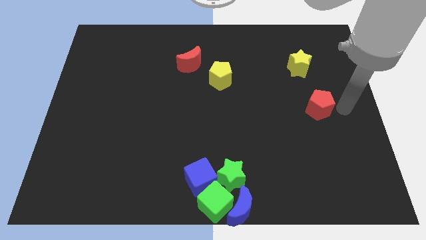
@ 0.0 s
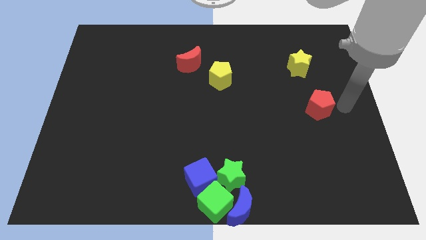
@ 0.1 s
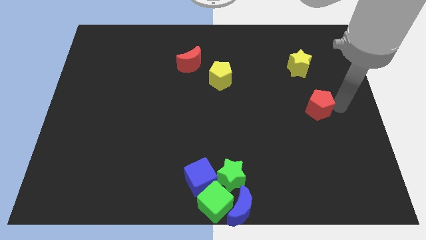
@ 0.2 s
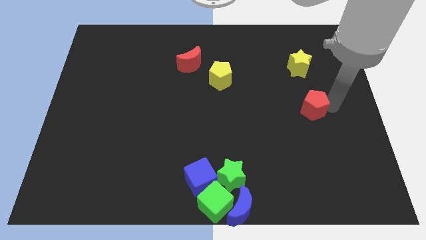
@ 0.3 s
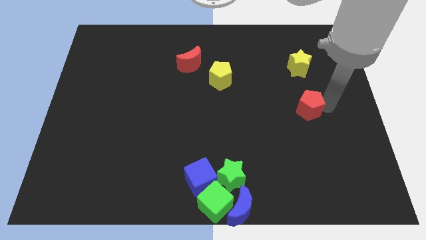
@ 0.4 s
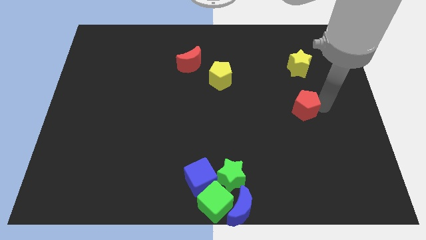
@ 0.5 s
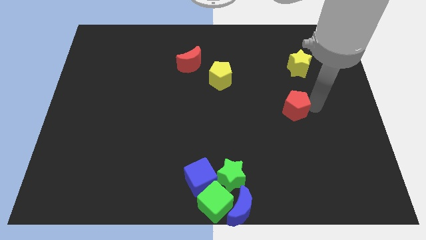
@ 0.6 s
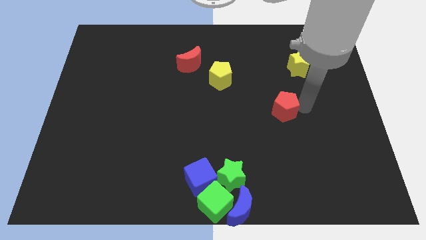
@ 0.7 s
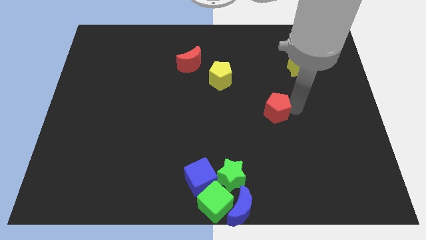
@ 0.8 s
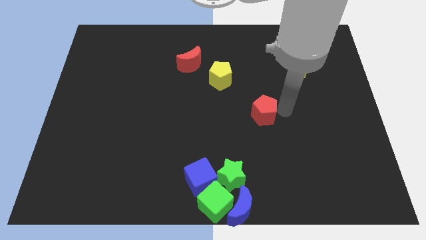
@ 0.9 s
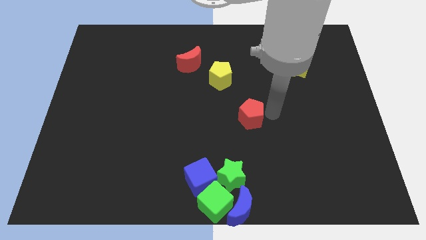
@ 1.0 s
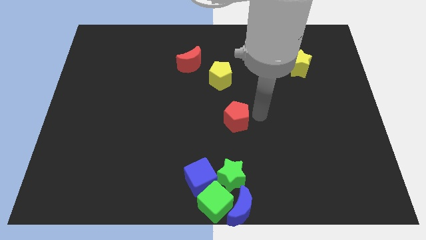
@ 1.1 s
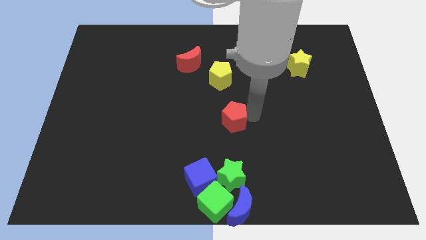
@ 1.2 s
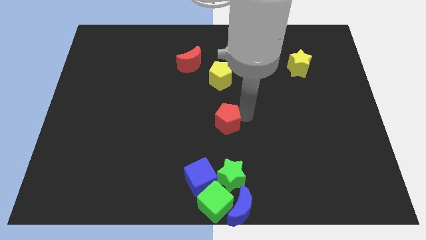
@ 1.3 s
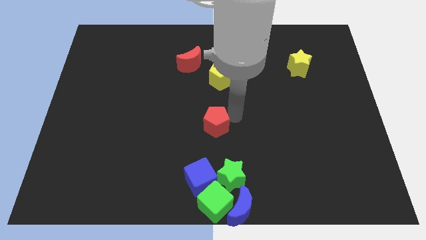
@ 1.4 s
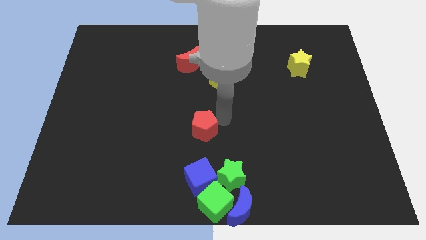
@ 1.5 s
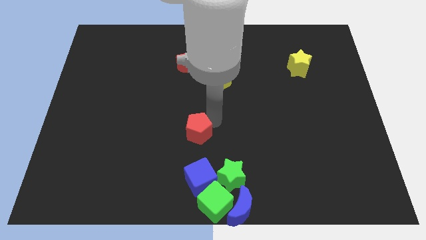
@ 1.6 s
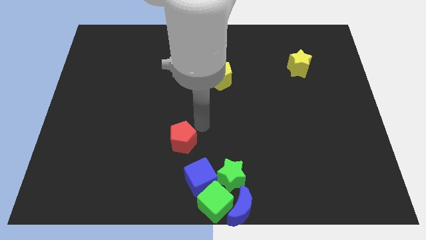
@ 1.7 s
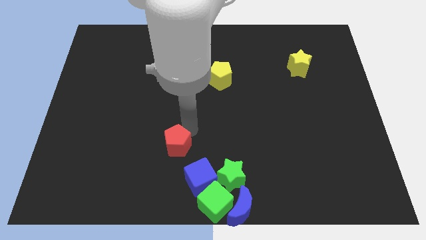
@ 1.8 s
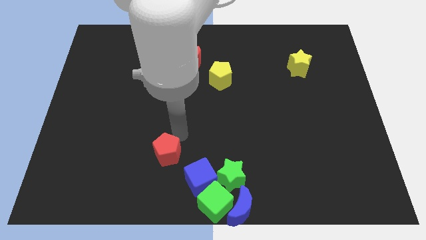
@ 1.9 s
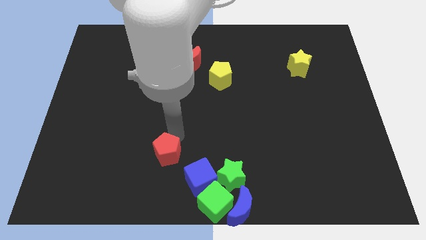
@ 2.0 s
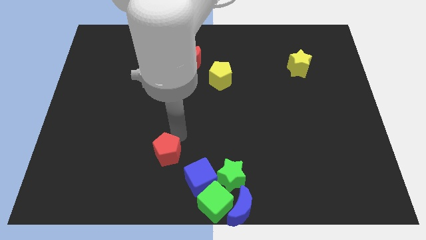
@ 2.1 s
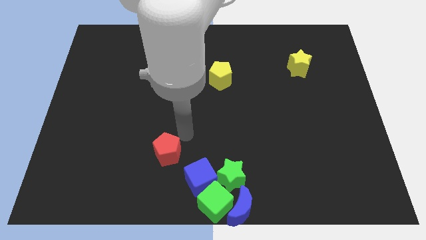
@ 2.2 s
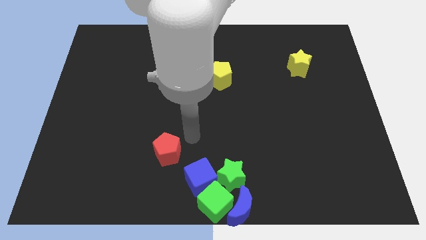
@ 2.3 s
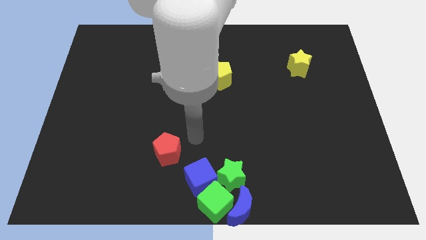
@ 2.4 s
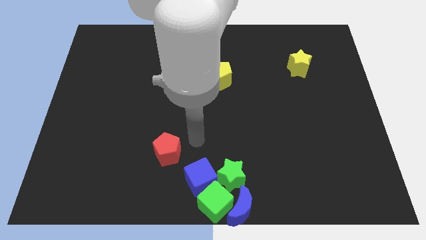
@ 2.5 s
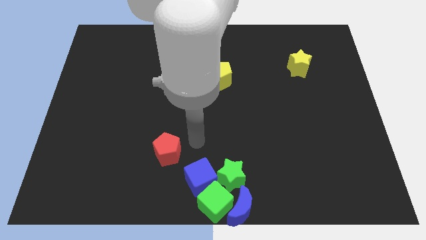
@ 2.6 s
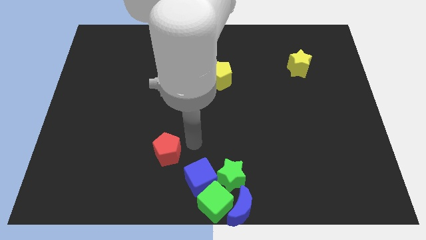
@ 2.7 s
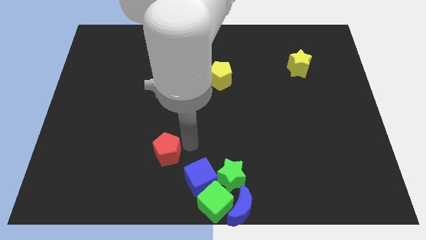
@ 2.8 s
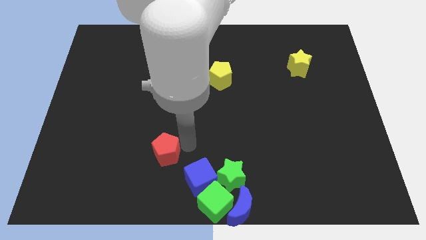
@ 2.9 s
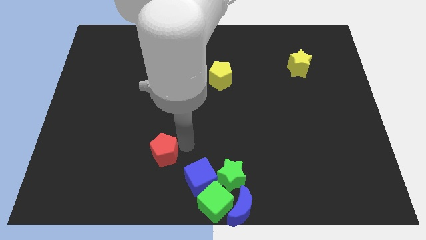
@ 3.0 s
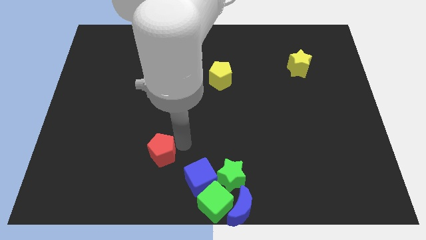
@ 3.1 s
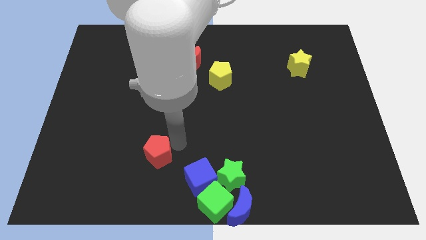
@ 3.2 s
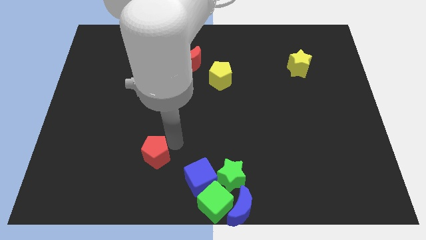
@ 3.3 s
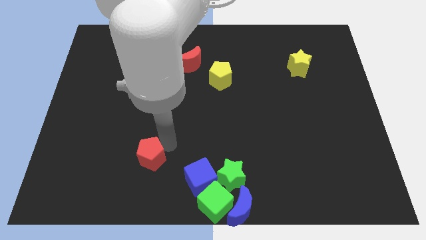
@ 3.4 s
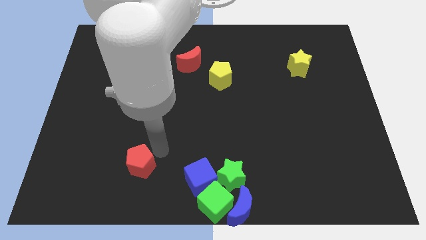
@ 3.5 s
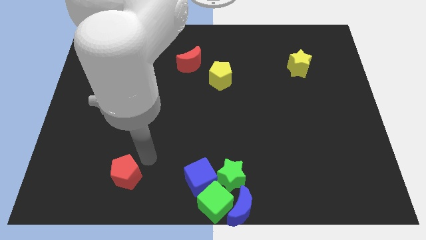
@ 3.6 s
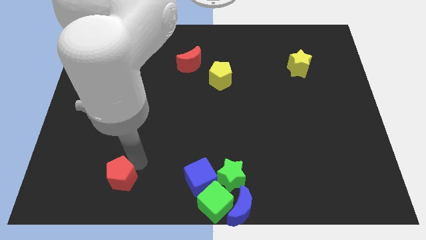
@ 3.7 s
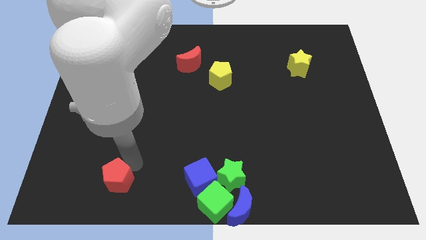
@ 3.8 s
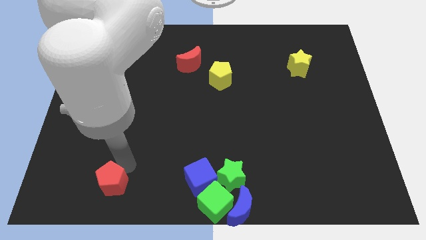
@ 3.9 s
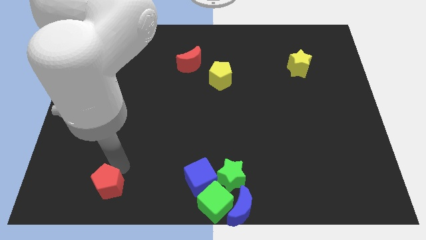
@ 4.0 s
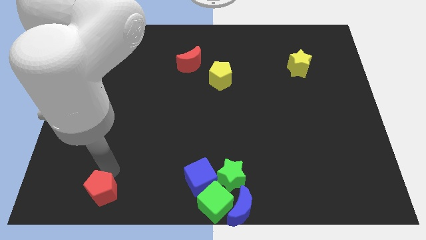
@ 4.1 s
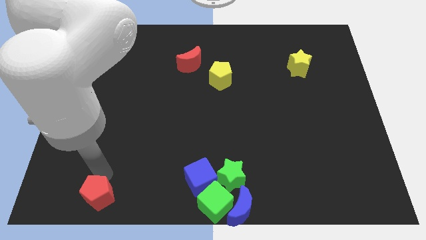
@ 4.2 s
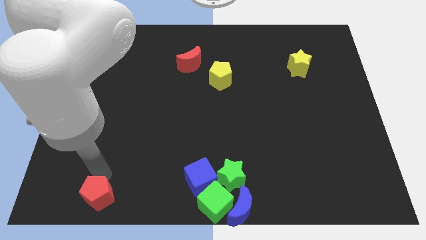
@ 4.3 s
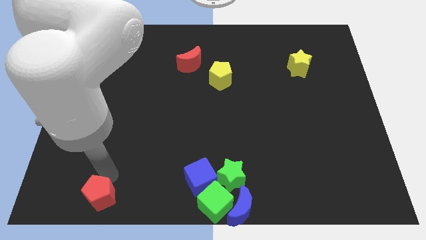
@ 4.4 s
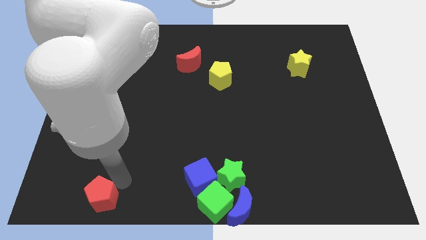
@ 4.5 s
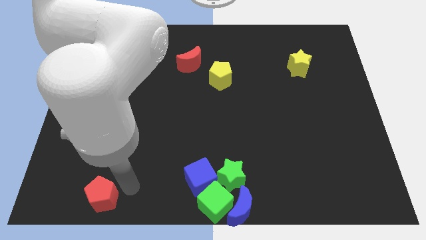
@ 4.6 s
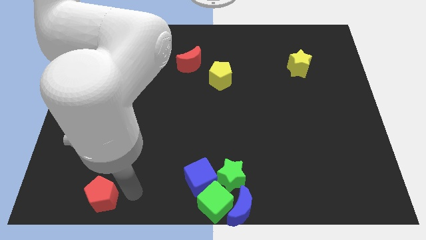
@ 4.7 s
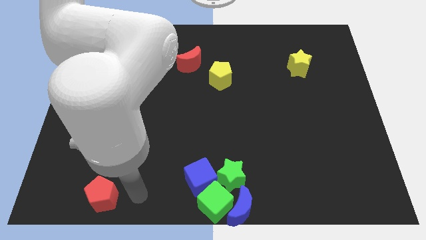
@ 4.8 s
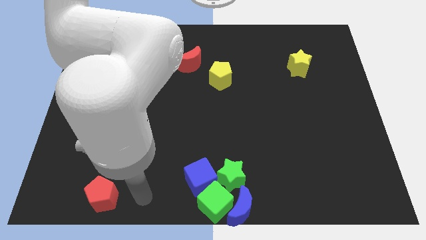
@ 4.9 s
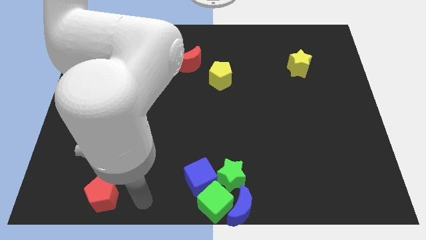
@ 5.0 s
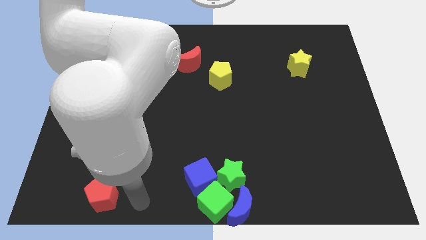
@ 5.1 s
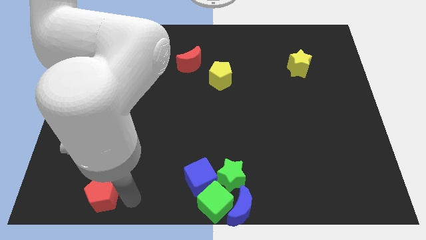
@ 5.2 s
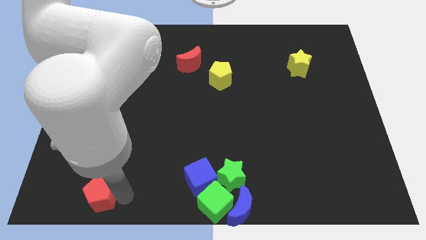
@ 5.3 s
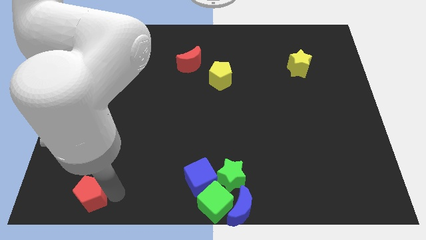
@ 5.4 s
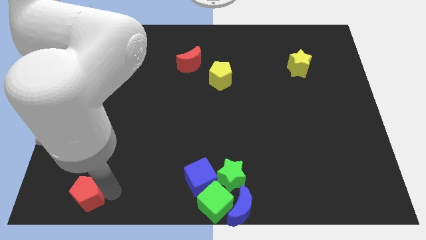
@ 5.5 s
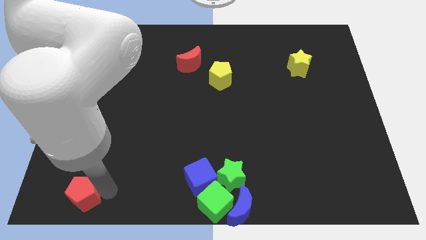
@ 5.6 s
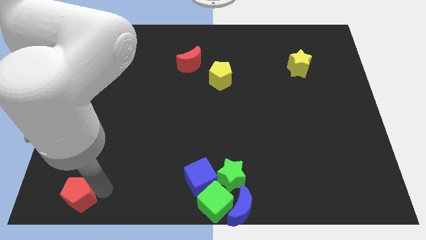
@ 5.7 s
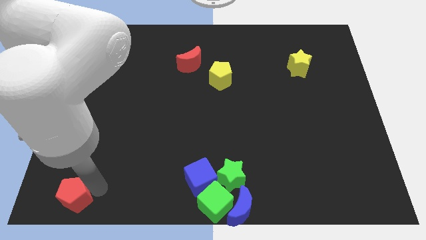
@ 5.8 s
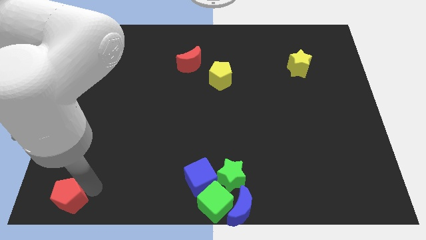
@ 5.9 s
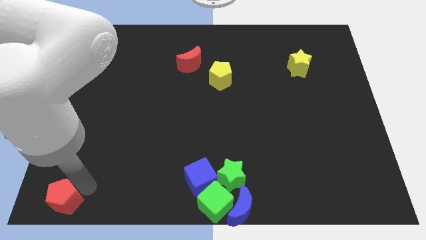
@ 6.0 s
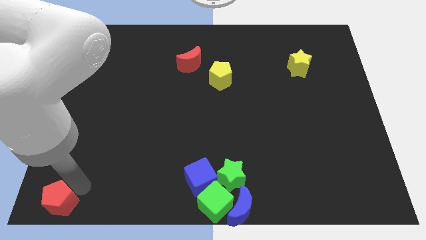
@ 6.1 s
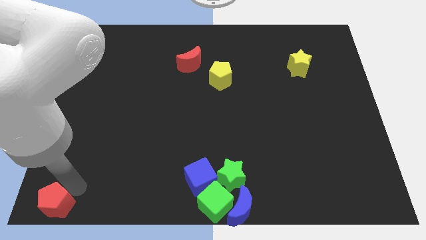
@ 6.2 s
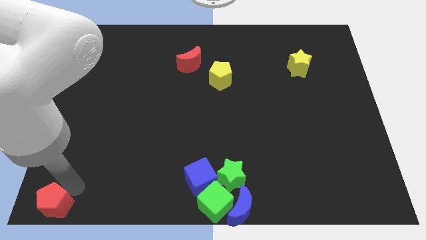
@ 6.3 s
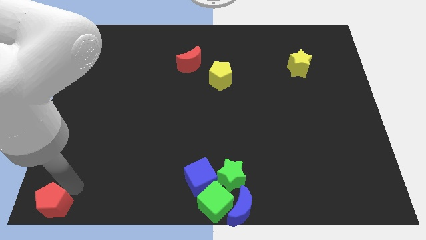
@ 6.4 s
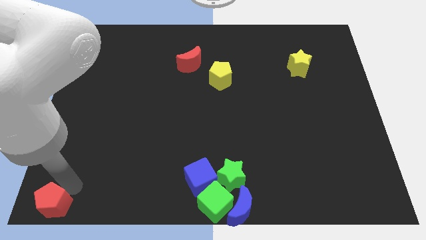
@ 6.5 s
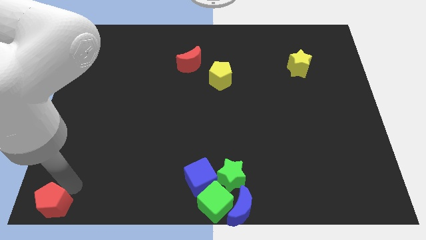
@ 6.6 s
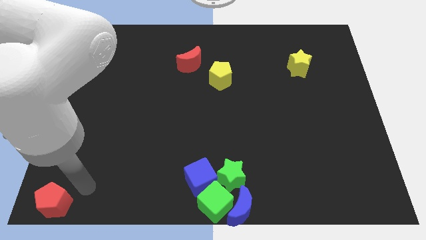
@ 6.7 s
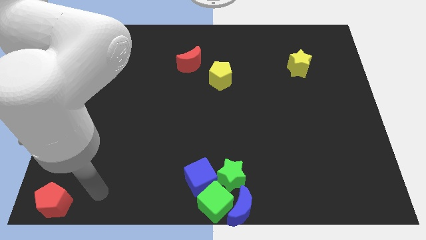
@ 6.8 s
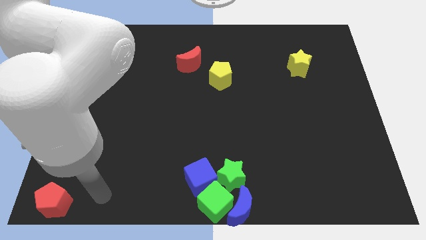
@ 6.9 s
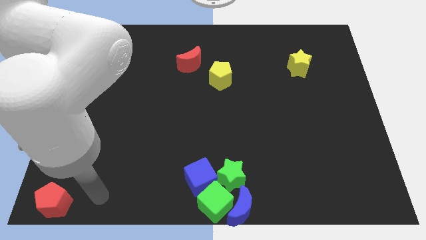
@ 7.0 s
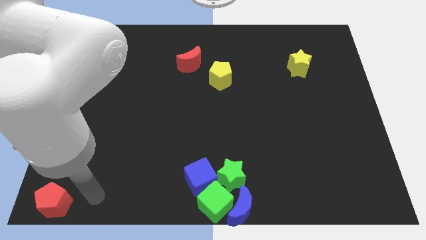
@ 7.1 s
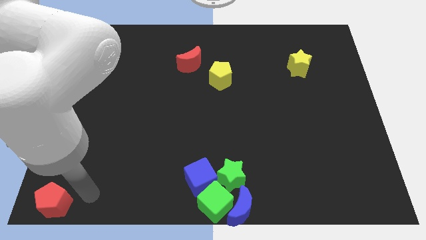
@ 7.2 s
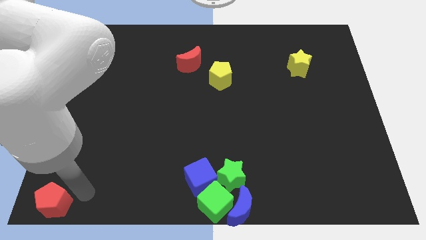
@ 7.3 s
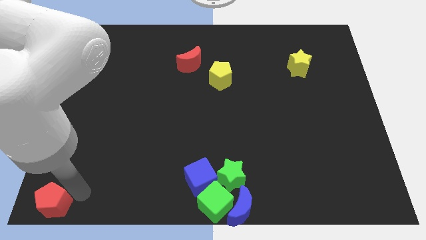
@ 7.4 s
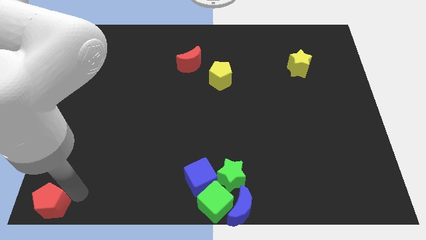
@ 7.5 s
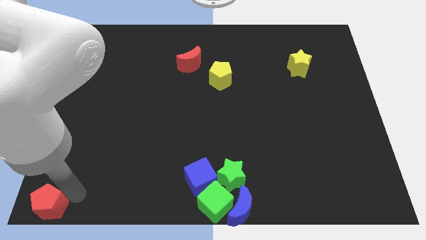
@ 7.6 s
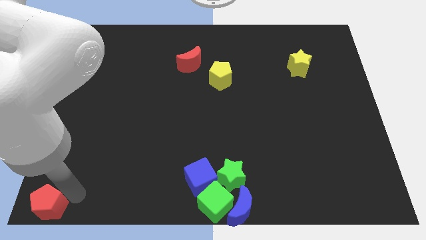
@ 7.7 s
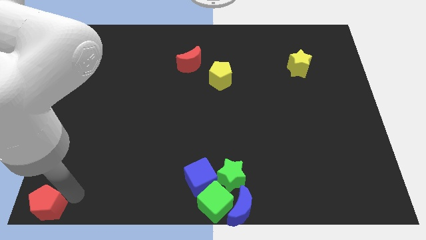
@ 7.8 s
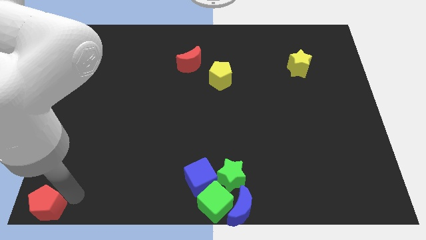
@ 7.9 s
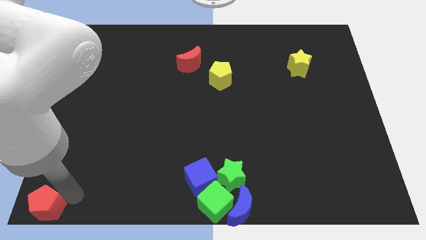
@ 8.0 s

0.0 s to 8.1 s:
move red pentagon to the bottom left

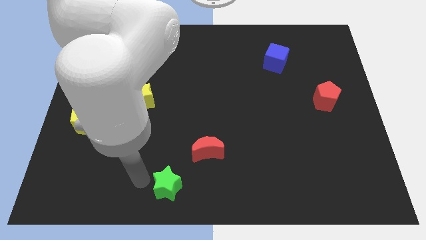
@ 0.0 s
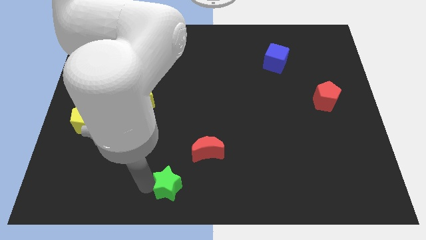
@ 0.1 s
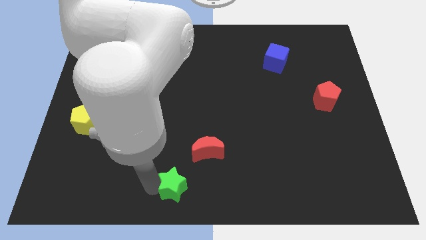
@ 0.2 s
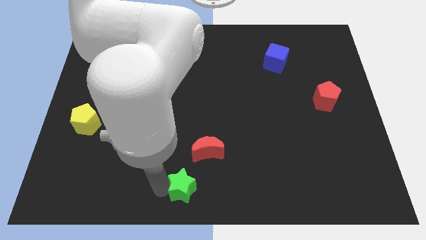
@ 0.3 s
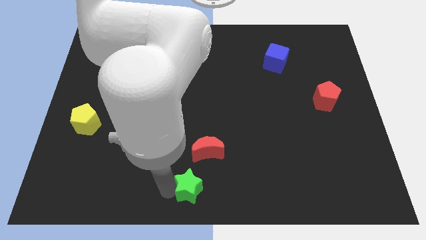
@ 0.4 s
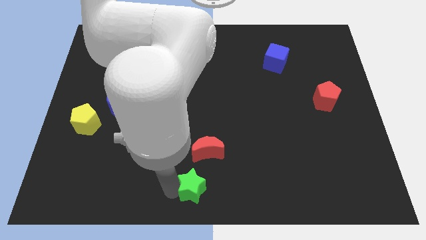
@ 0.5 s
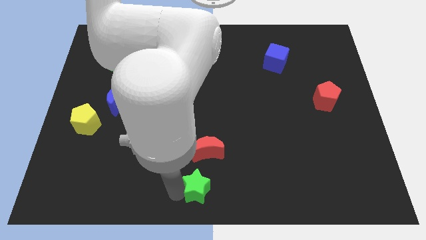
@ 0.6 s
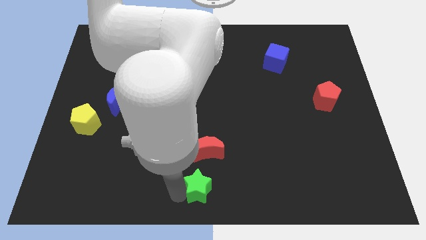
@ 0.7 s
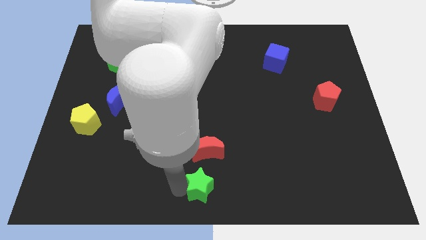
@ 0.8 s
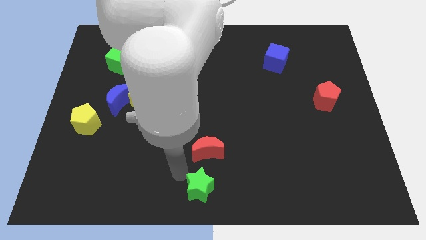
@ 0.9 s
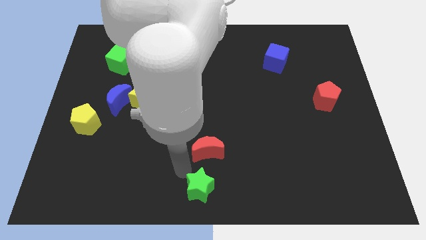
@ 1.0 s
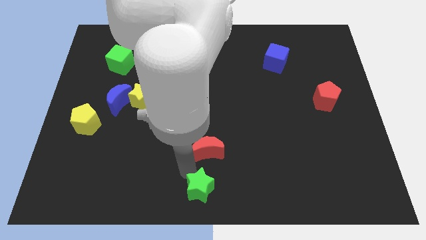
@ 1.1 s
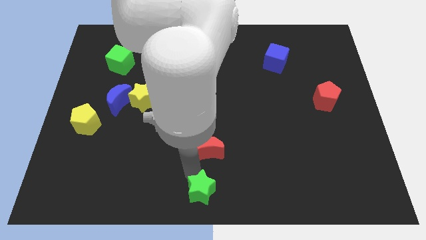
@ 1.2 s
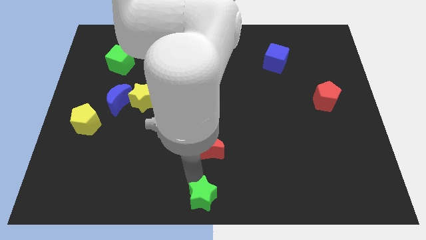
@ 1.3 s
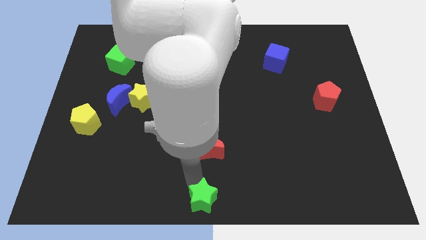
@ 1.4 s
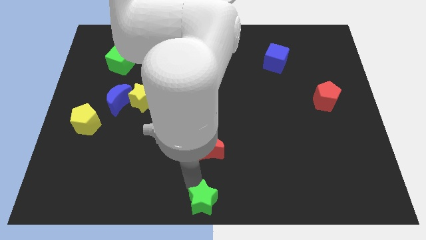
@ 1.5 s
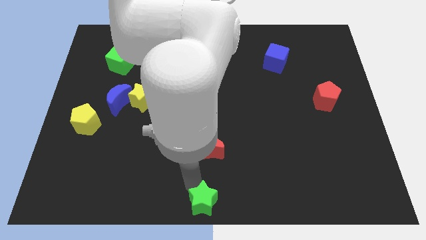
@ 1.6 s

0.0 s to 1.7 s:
place the green star below the red crescent
